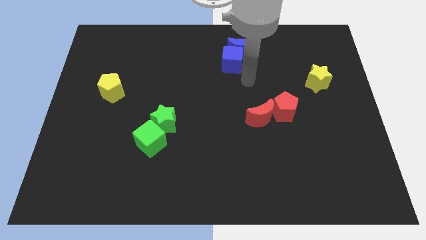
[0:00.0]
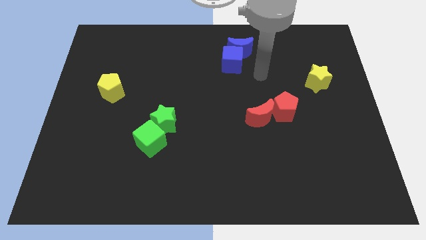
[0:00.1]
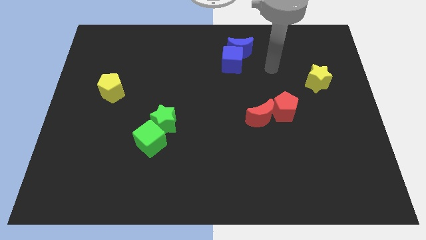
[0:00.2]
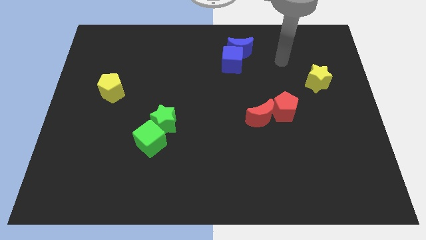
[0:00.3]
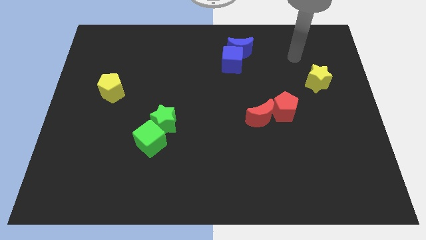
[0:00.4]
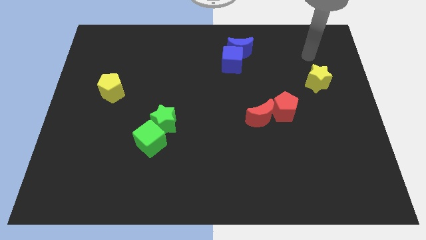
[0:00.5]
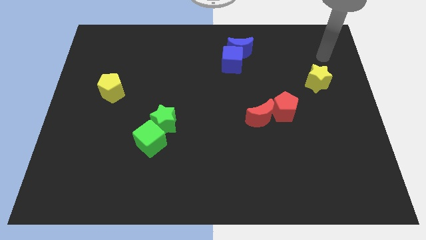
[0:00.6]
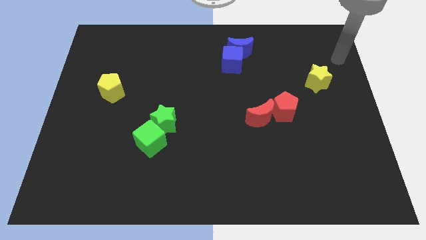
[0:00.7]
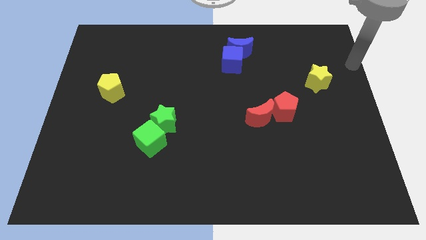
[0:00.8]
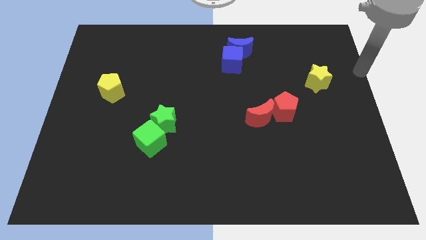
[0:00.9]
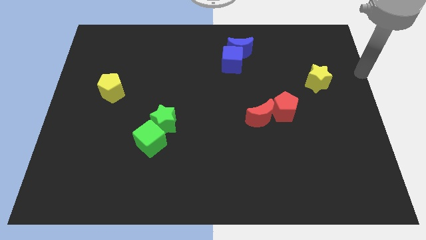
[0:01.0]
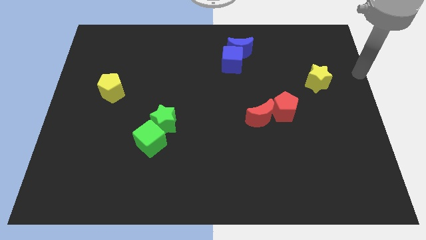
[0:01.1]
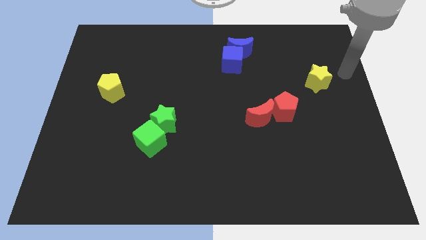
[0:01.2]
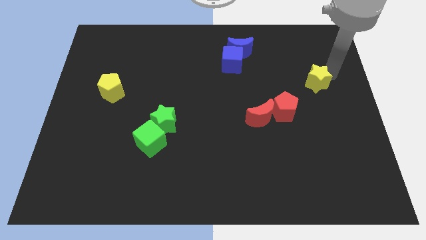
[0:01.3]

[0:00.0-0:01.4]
move the arm towards the top right side of the board

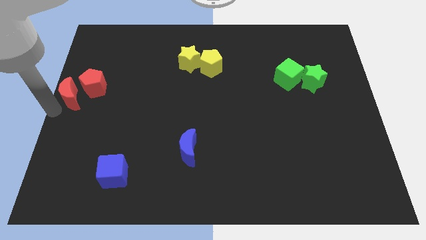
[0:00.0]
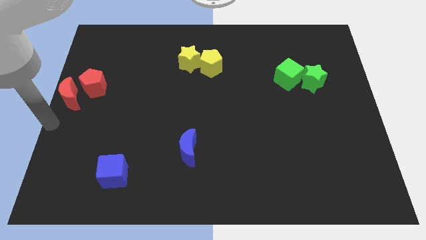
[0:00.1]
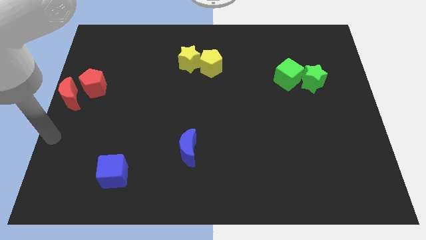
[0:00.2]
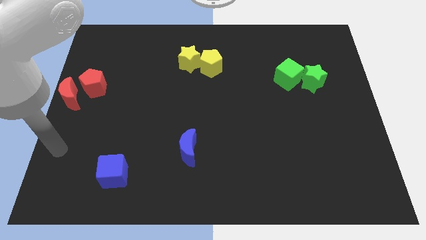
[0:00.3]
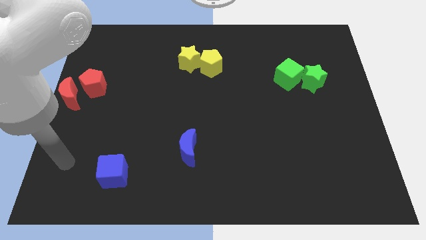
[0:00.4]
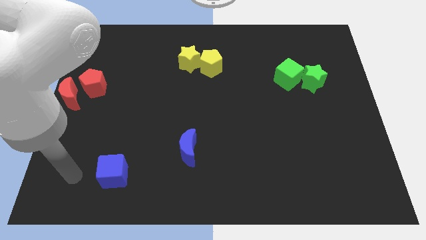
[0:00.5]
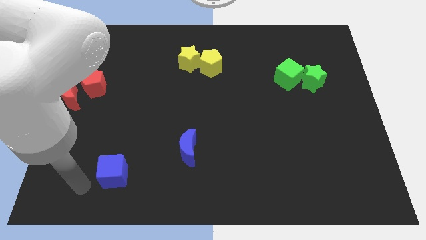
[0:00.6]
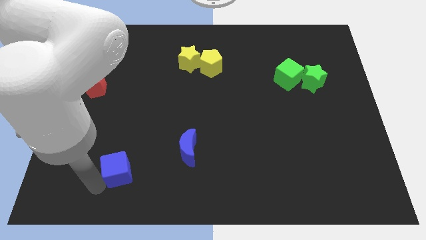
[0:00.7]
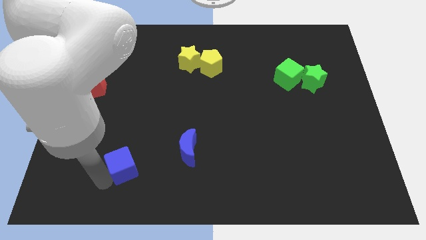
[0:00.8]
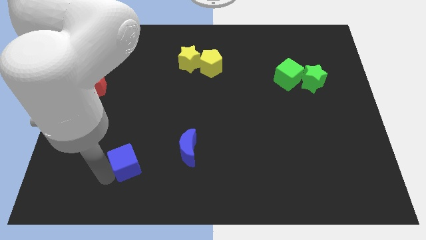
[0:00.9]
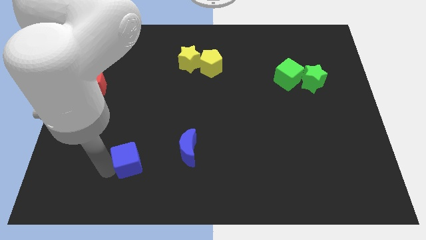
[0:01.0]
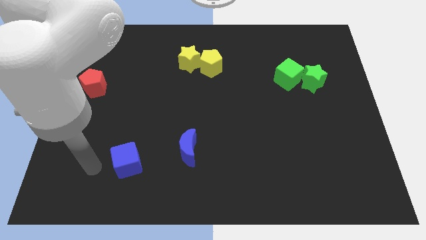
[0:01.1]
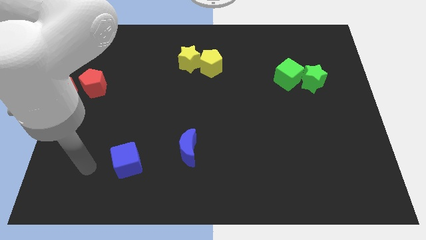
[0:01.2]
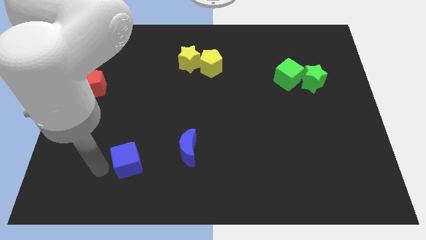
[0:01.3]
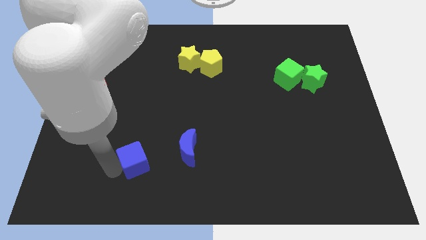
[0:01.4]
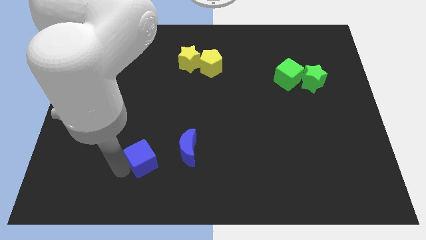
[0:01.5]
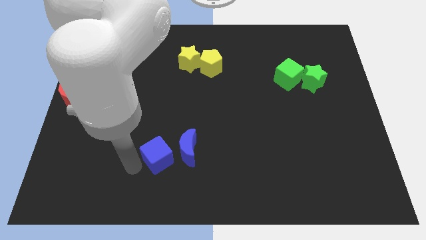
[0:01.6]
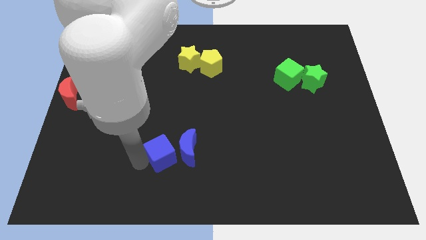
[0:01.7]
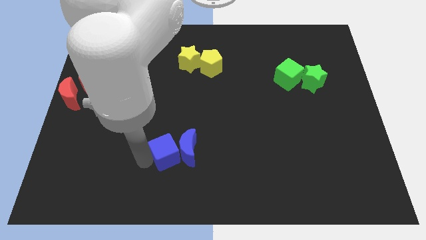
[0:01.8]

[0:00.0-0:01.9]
move the blue cube to the left of the blue crescent

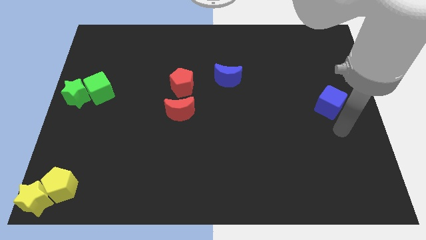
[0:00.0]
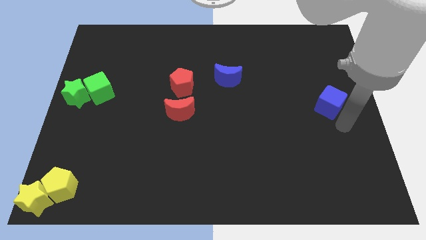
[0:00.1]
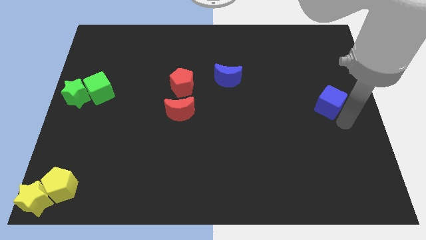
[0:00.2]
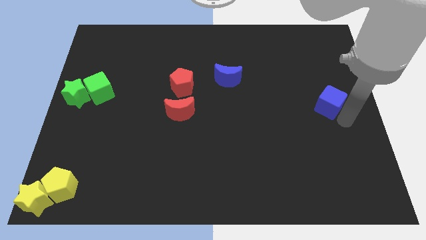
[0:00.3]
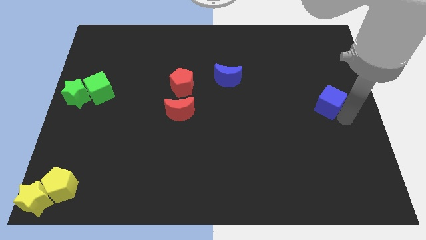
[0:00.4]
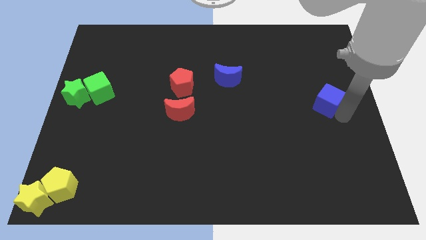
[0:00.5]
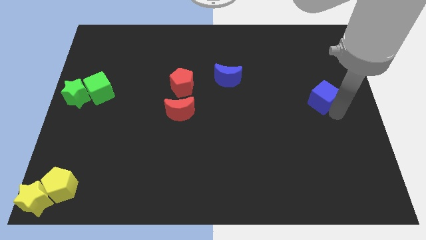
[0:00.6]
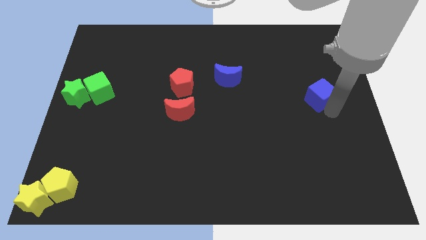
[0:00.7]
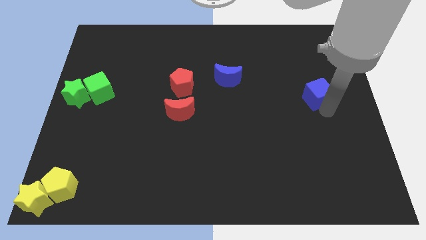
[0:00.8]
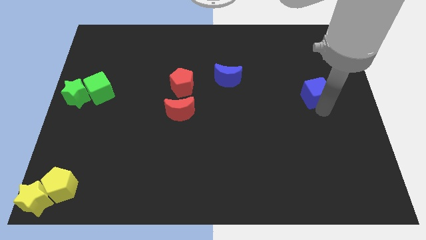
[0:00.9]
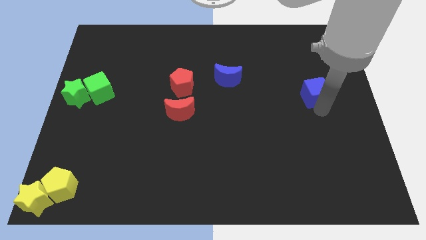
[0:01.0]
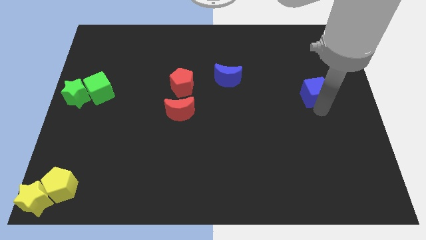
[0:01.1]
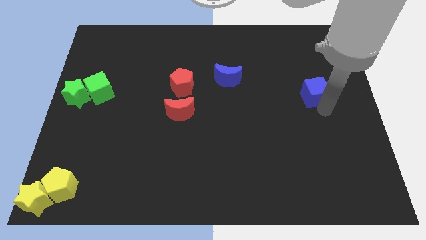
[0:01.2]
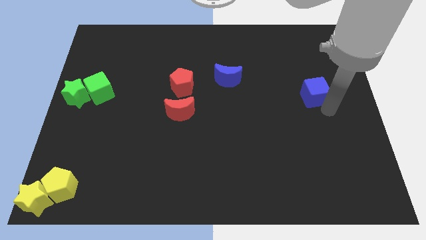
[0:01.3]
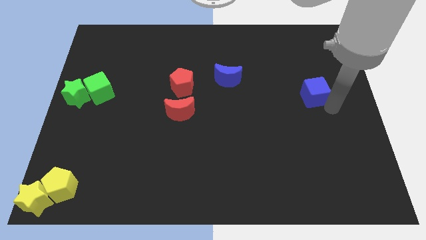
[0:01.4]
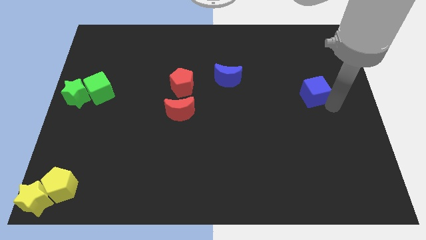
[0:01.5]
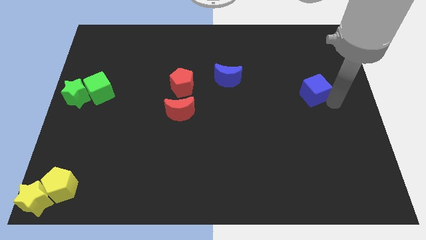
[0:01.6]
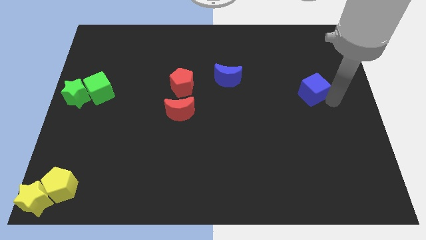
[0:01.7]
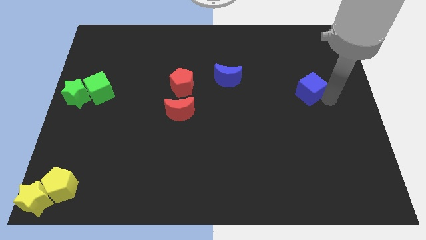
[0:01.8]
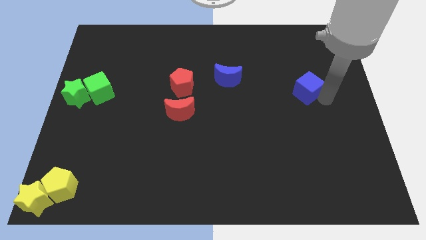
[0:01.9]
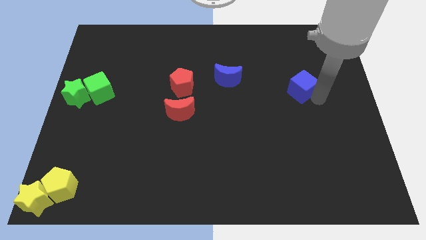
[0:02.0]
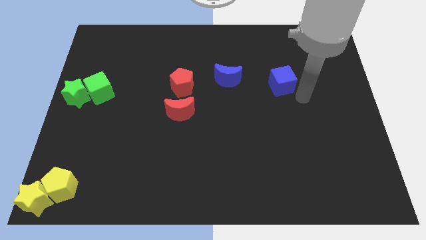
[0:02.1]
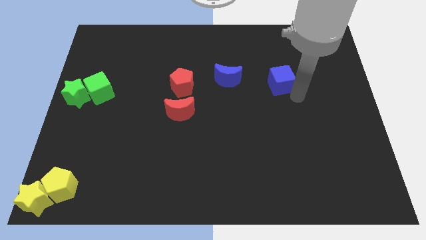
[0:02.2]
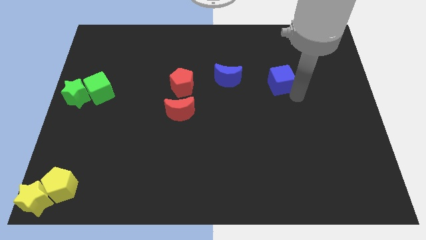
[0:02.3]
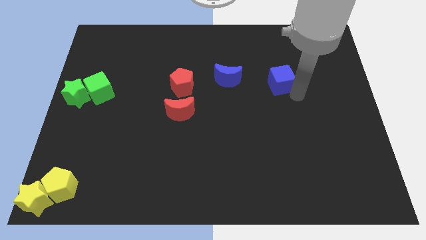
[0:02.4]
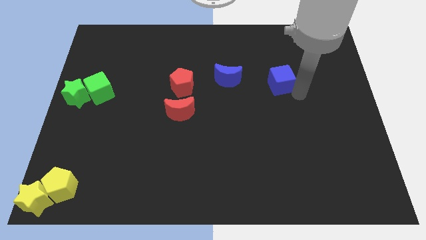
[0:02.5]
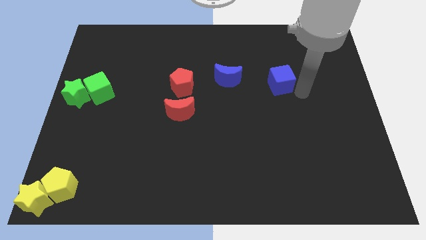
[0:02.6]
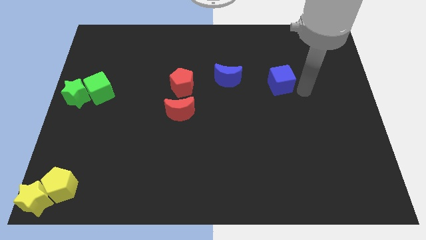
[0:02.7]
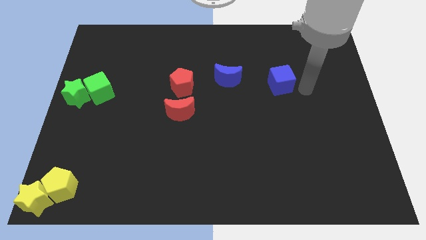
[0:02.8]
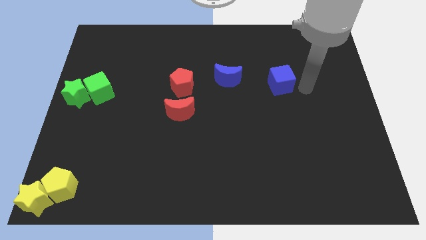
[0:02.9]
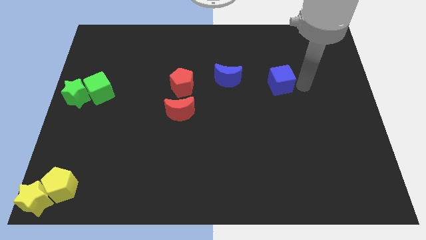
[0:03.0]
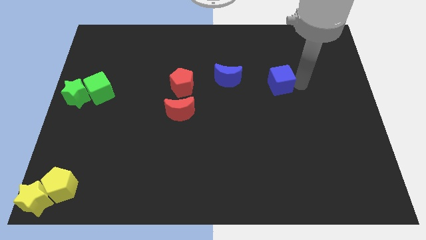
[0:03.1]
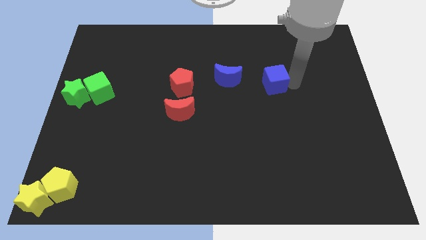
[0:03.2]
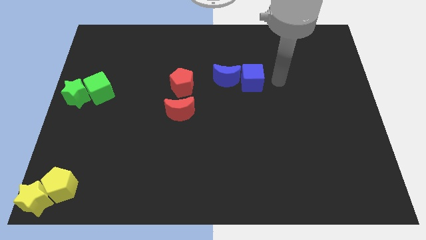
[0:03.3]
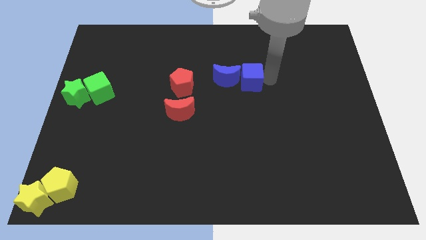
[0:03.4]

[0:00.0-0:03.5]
move the blue cube right to the blue crescent

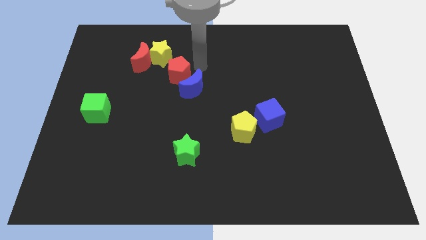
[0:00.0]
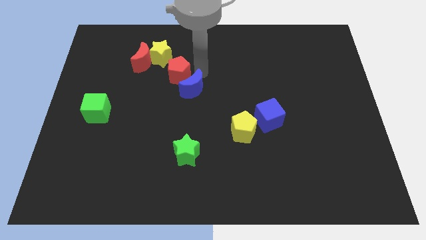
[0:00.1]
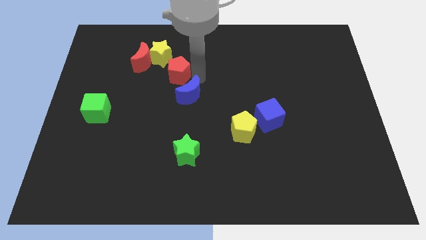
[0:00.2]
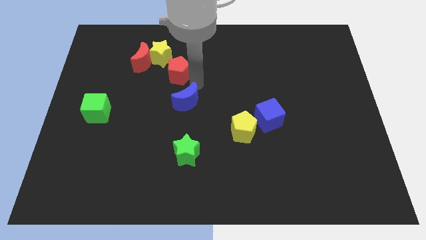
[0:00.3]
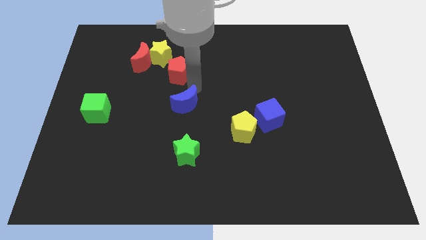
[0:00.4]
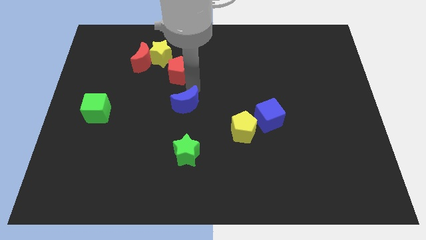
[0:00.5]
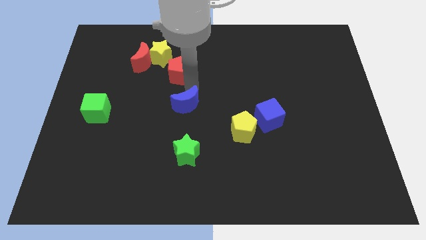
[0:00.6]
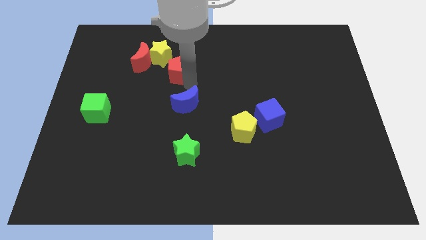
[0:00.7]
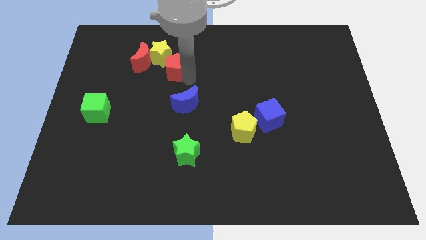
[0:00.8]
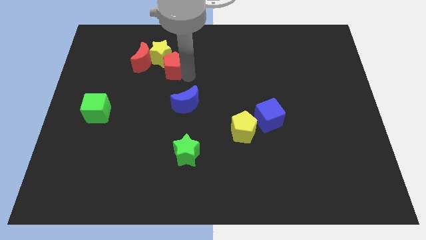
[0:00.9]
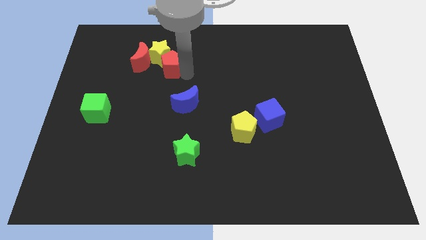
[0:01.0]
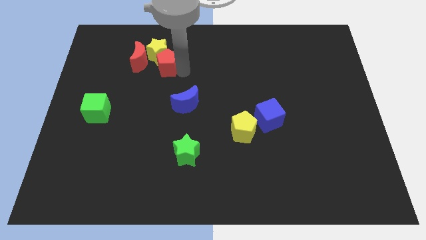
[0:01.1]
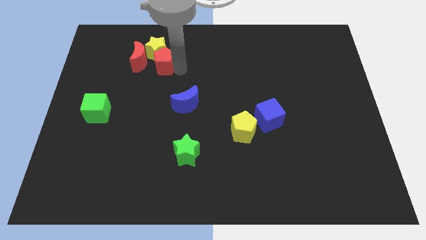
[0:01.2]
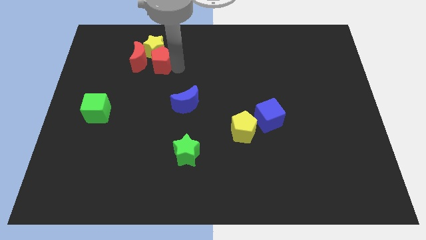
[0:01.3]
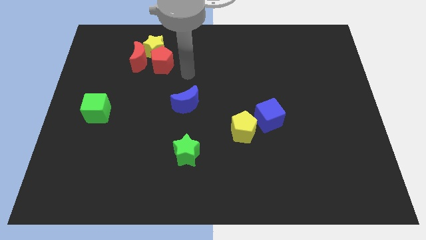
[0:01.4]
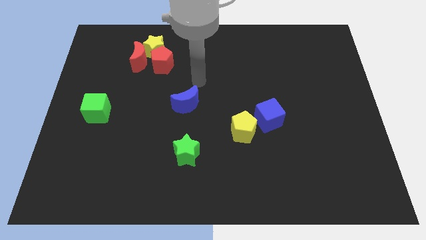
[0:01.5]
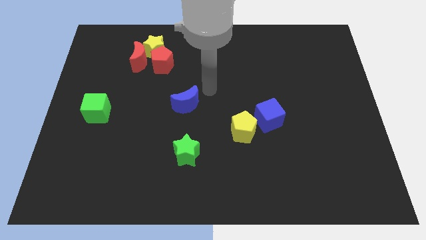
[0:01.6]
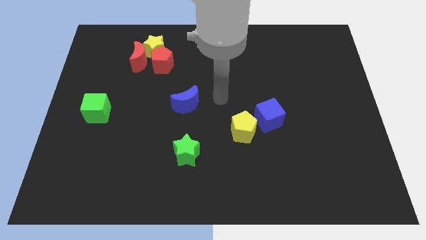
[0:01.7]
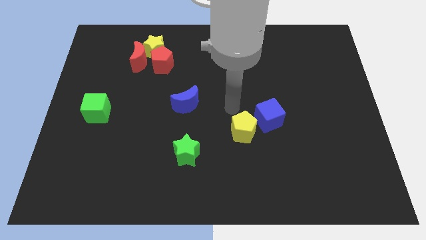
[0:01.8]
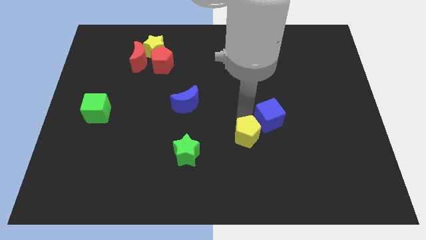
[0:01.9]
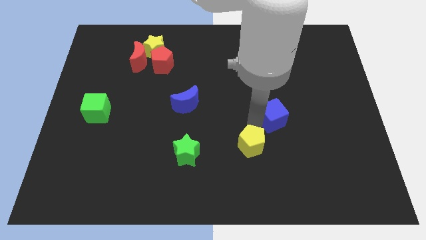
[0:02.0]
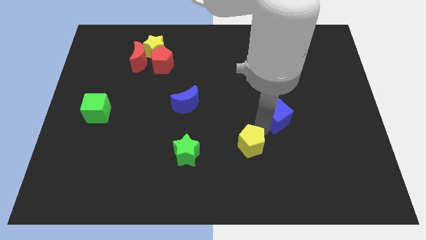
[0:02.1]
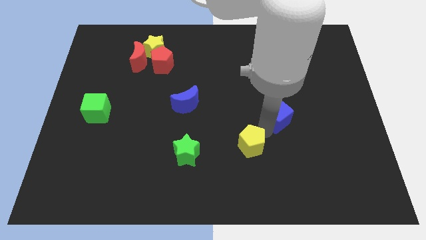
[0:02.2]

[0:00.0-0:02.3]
separate blue moon from red pentagon
